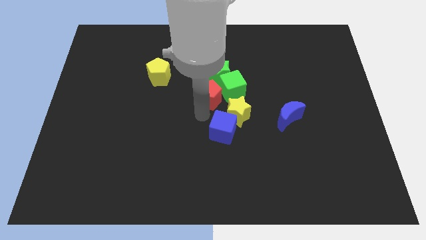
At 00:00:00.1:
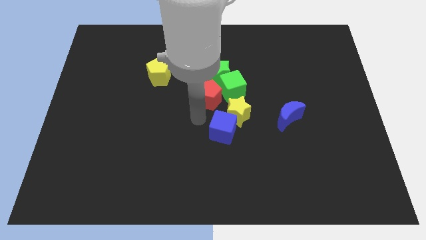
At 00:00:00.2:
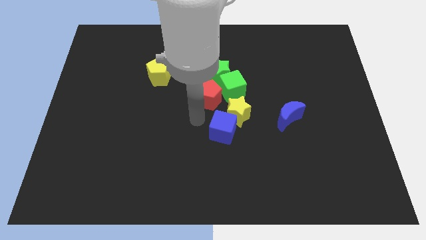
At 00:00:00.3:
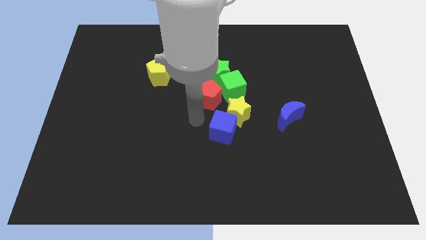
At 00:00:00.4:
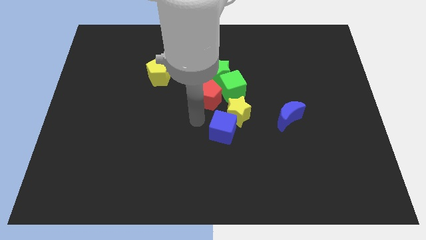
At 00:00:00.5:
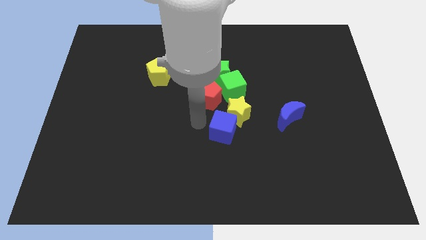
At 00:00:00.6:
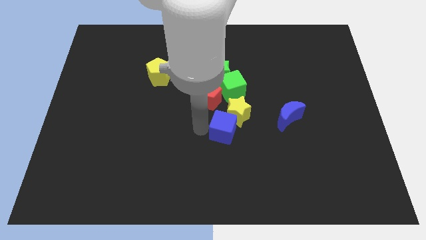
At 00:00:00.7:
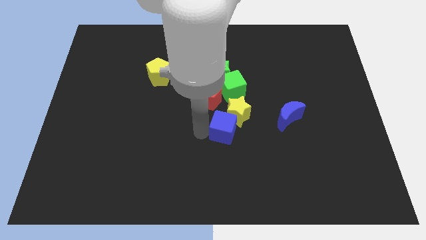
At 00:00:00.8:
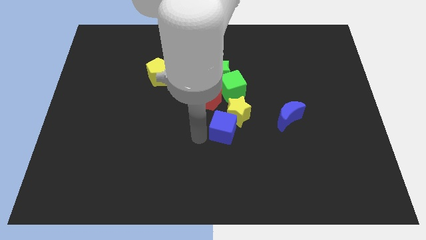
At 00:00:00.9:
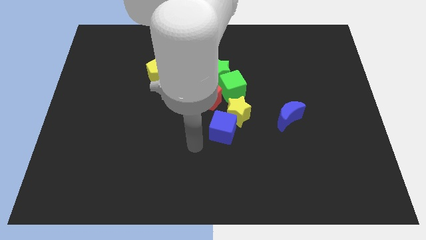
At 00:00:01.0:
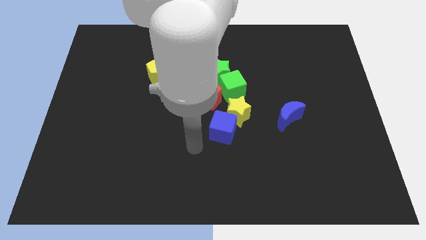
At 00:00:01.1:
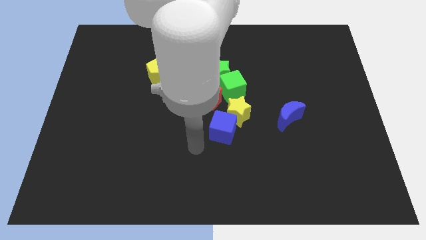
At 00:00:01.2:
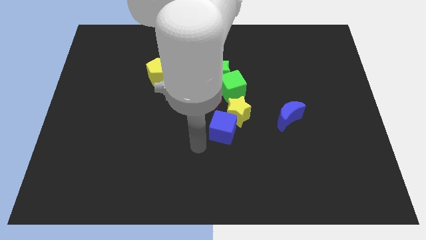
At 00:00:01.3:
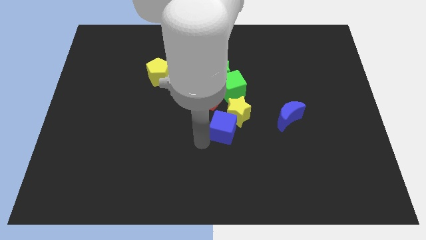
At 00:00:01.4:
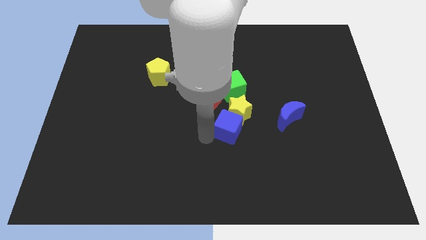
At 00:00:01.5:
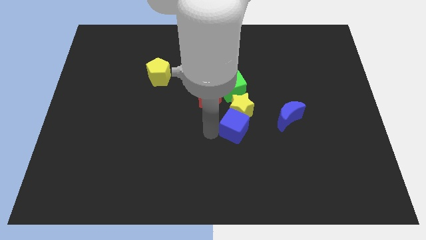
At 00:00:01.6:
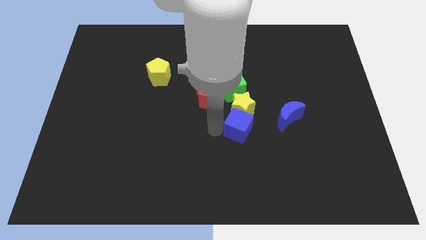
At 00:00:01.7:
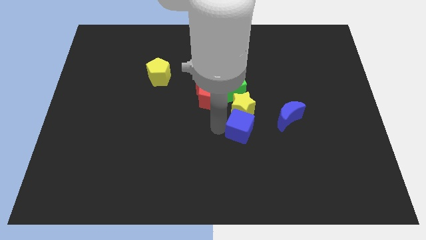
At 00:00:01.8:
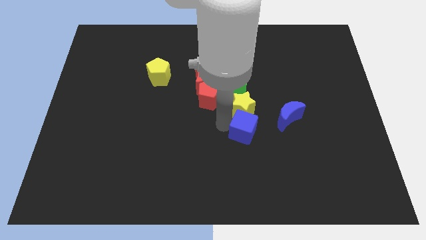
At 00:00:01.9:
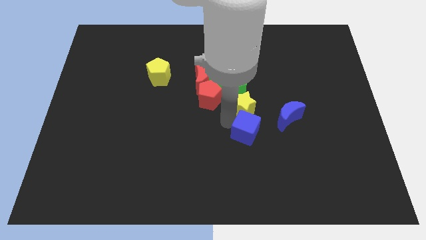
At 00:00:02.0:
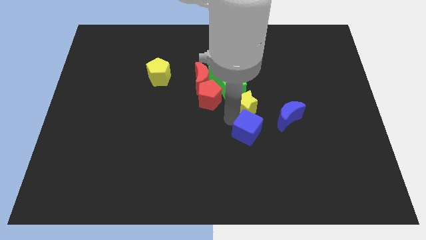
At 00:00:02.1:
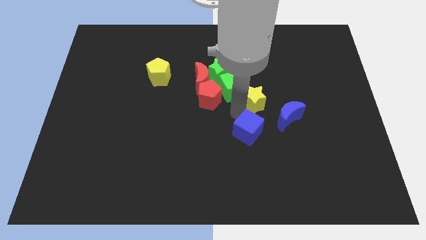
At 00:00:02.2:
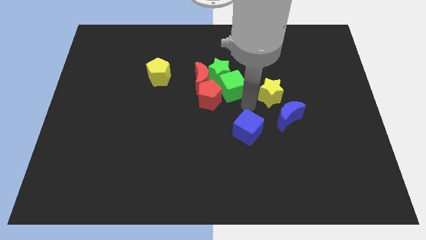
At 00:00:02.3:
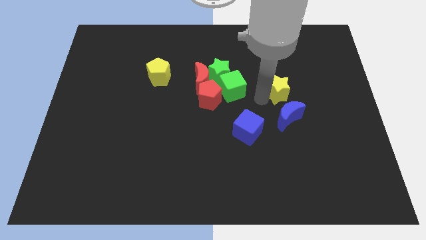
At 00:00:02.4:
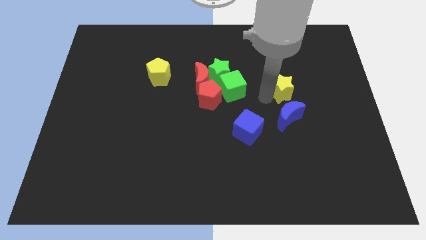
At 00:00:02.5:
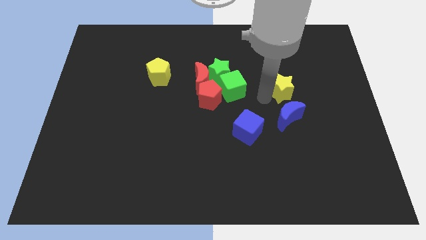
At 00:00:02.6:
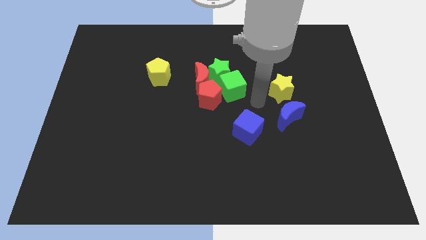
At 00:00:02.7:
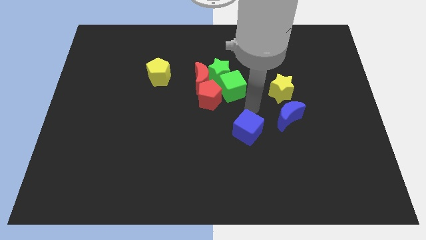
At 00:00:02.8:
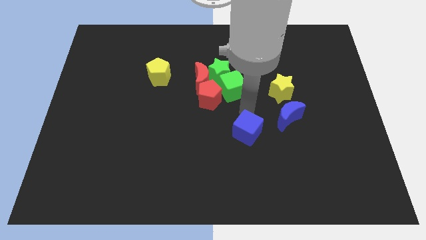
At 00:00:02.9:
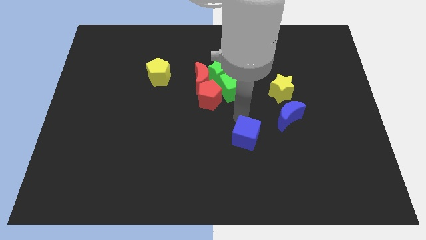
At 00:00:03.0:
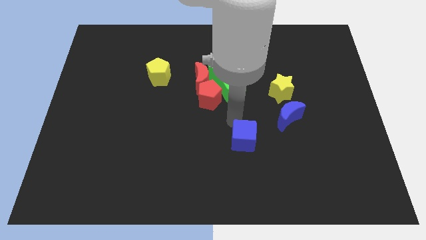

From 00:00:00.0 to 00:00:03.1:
push the yellow star to the top of the blue crescent

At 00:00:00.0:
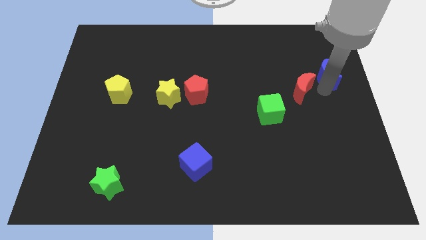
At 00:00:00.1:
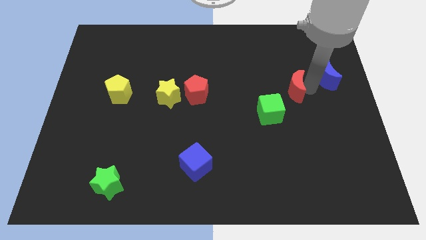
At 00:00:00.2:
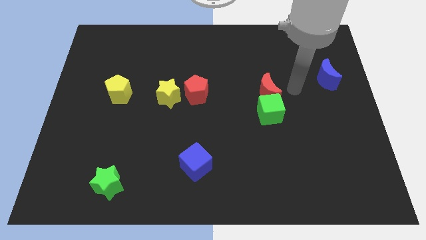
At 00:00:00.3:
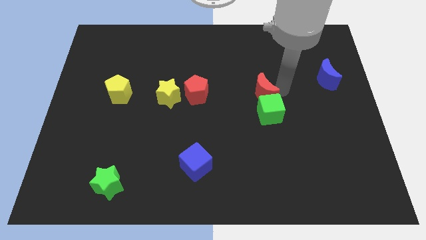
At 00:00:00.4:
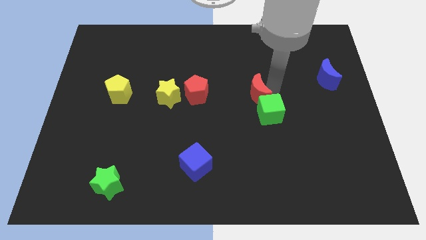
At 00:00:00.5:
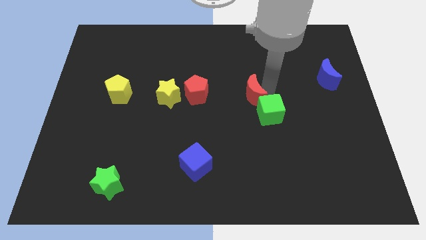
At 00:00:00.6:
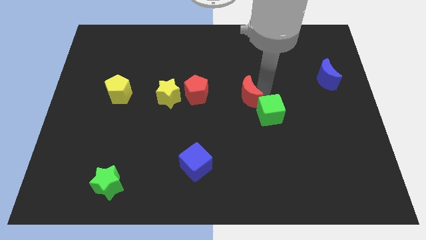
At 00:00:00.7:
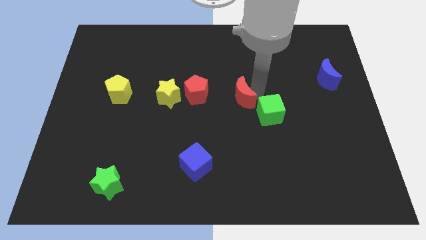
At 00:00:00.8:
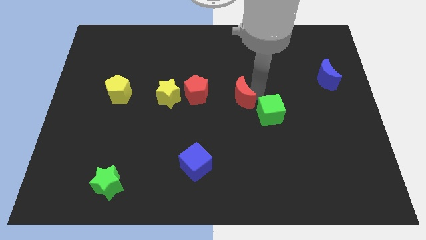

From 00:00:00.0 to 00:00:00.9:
push the red crescent slightly to the left

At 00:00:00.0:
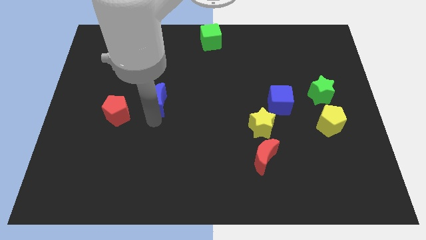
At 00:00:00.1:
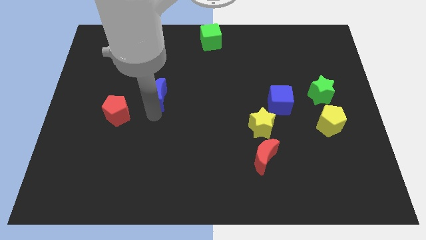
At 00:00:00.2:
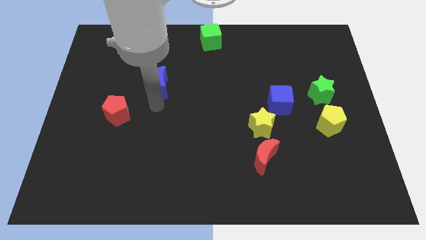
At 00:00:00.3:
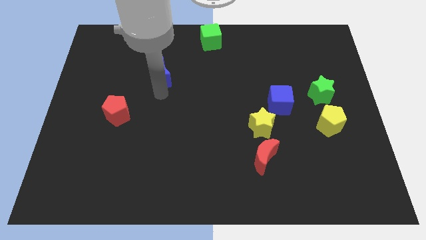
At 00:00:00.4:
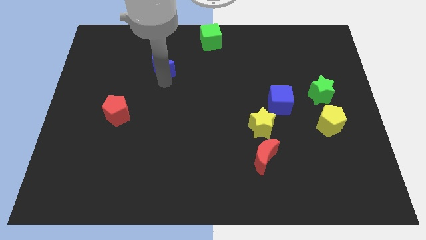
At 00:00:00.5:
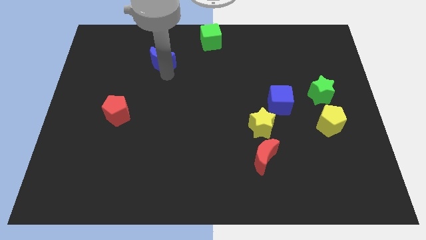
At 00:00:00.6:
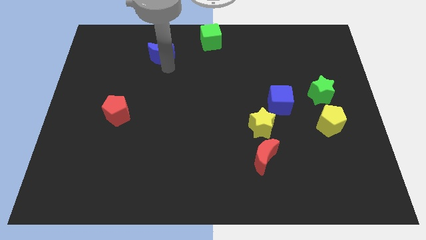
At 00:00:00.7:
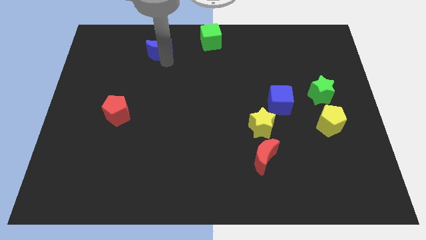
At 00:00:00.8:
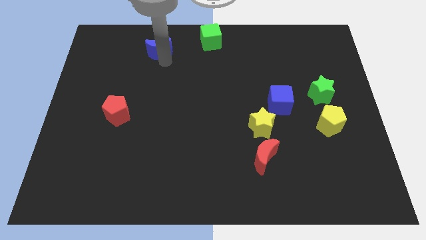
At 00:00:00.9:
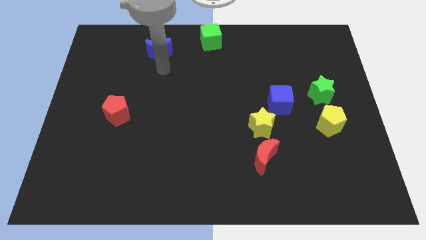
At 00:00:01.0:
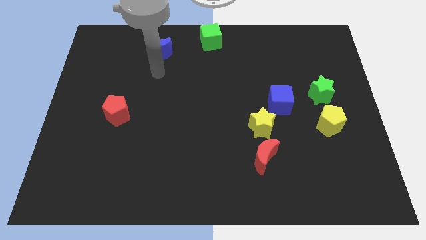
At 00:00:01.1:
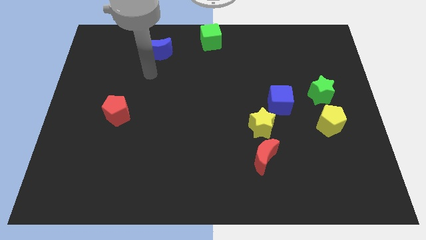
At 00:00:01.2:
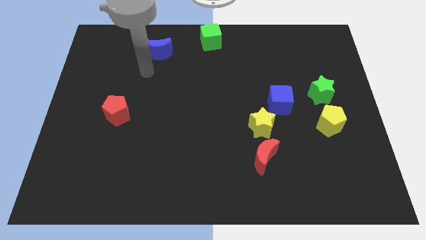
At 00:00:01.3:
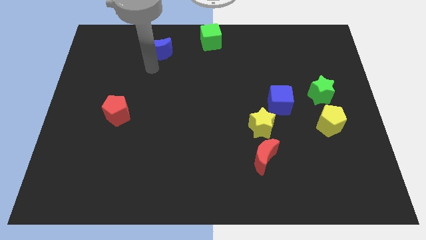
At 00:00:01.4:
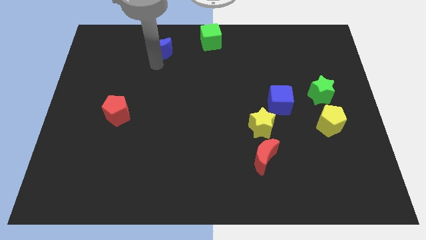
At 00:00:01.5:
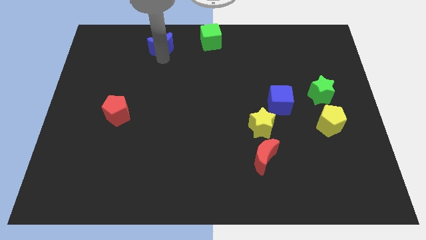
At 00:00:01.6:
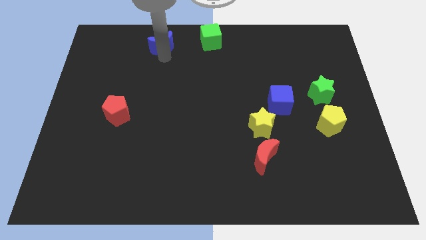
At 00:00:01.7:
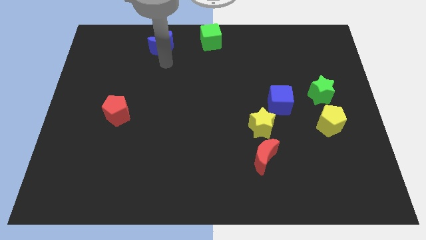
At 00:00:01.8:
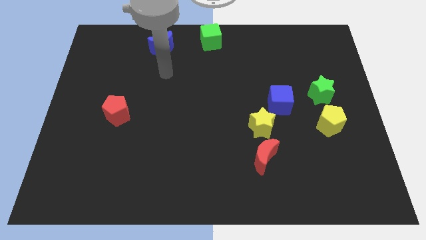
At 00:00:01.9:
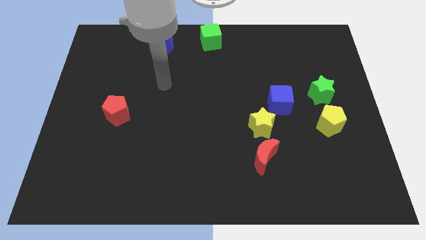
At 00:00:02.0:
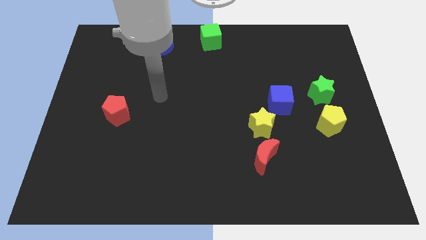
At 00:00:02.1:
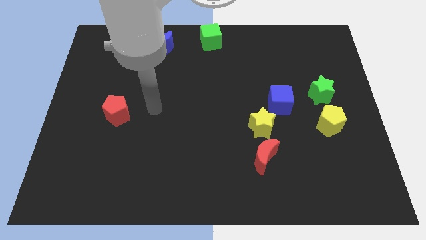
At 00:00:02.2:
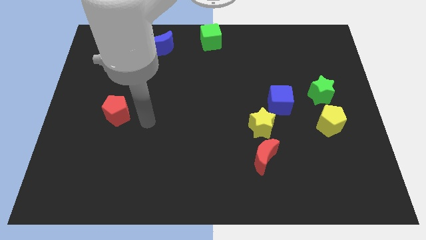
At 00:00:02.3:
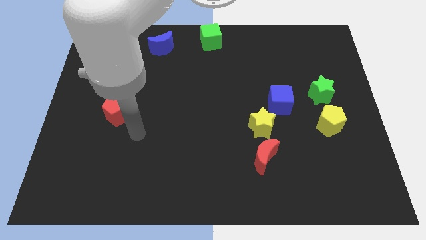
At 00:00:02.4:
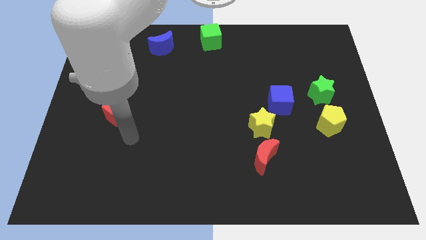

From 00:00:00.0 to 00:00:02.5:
put the blue crescent to the left of the green cube

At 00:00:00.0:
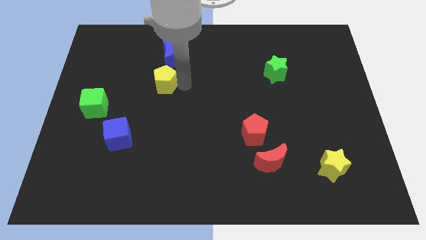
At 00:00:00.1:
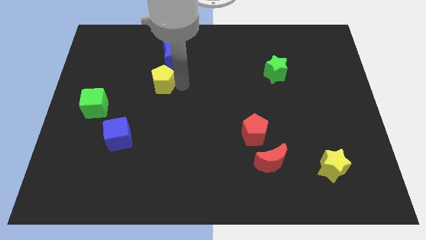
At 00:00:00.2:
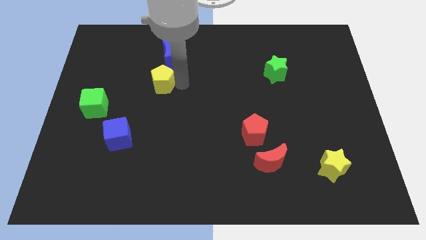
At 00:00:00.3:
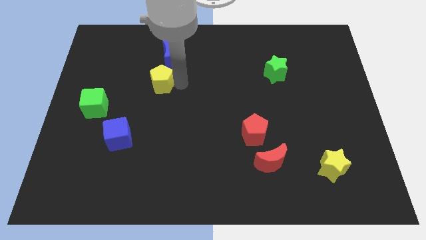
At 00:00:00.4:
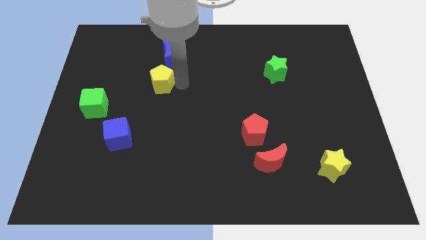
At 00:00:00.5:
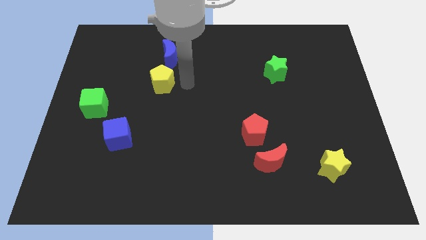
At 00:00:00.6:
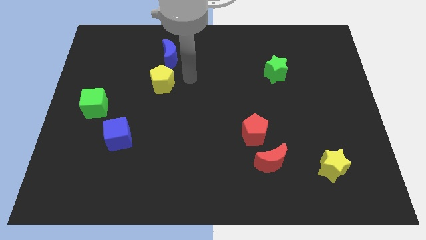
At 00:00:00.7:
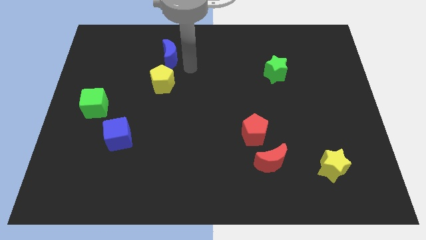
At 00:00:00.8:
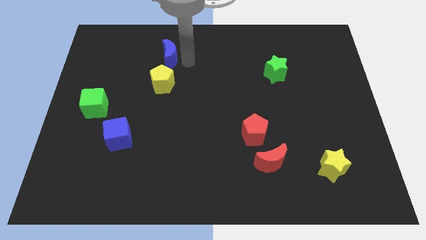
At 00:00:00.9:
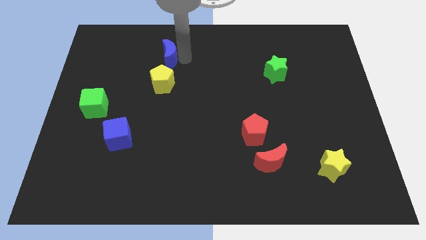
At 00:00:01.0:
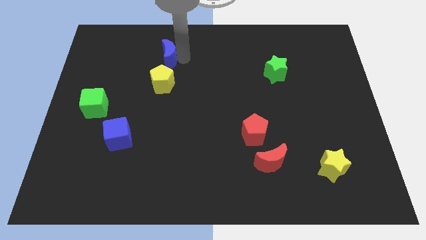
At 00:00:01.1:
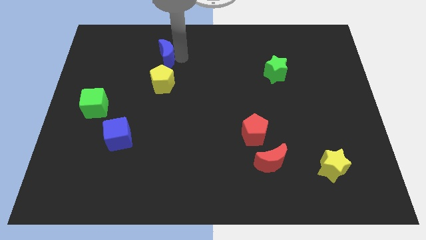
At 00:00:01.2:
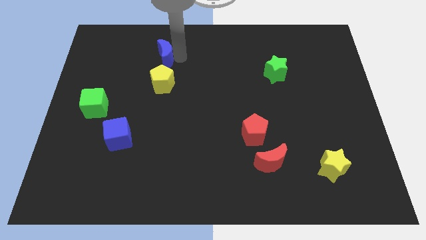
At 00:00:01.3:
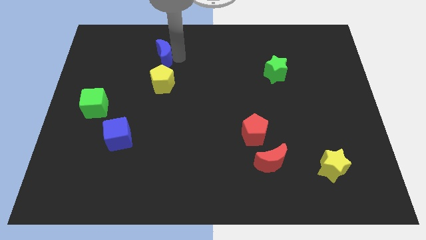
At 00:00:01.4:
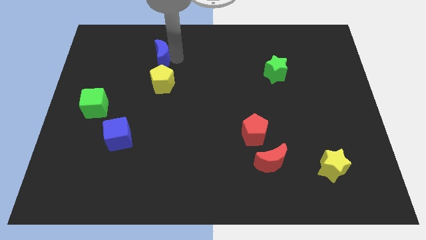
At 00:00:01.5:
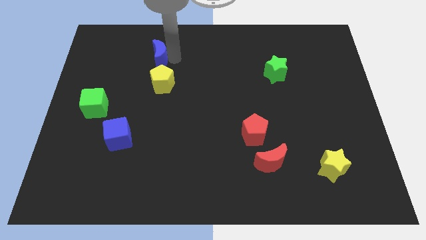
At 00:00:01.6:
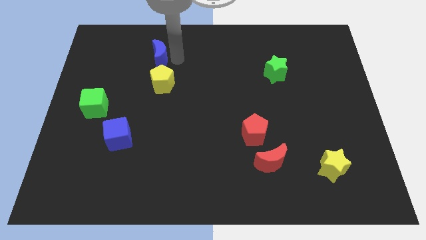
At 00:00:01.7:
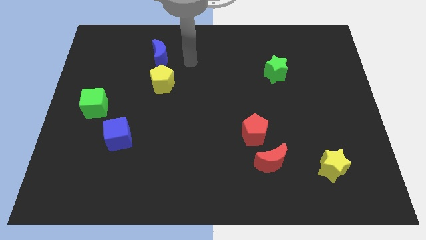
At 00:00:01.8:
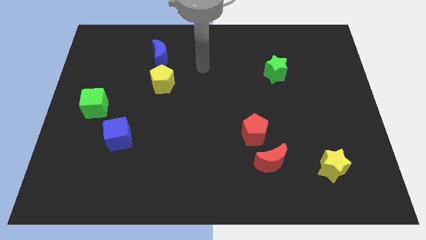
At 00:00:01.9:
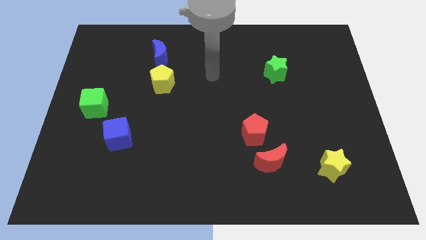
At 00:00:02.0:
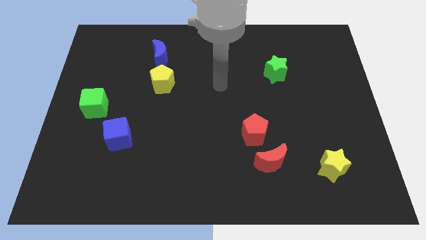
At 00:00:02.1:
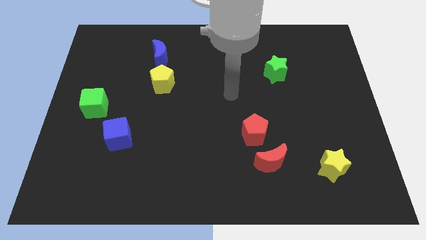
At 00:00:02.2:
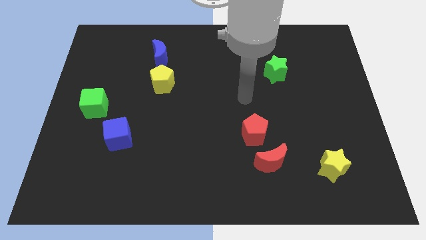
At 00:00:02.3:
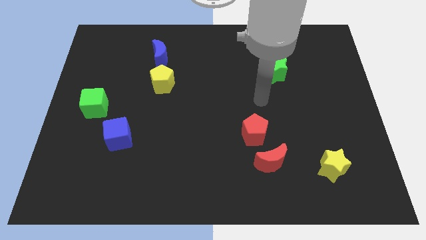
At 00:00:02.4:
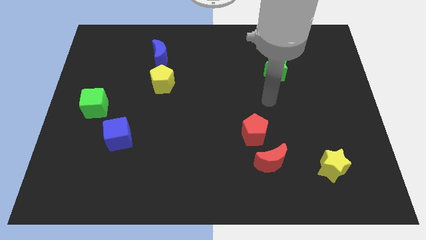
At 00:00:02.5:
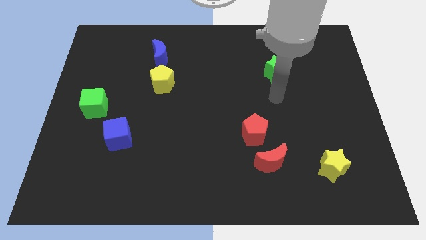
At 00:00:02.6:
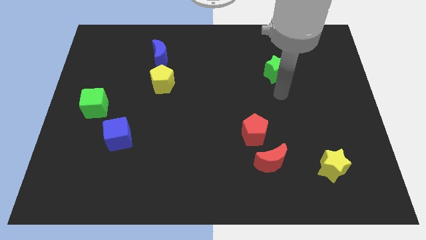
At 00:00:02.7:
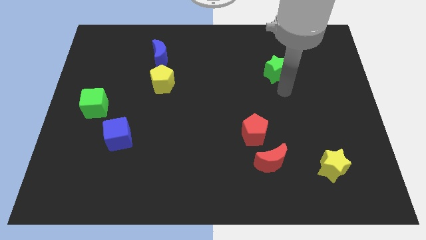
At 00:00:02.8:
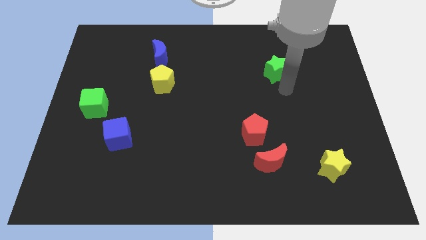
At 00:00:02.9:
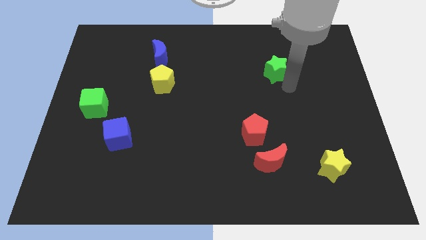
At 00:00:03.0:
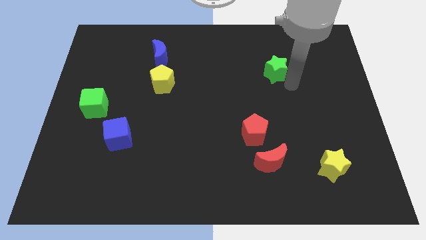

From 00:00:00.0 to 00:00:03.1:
move green star slightly up
